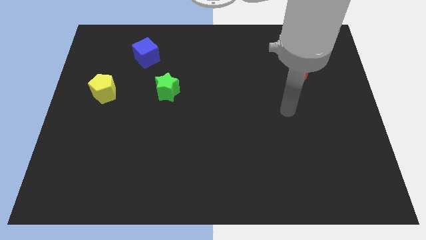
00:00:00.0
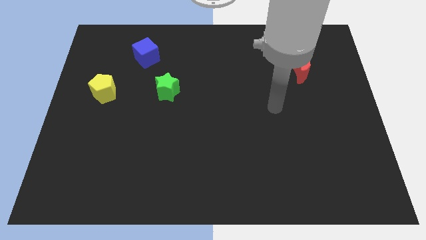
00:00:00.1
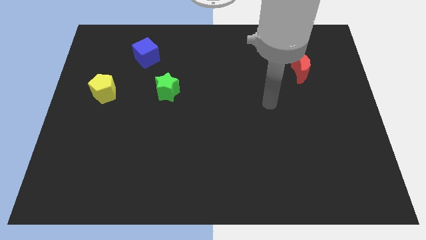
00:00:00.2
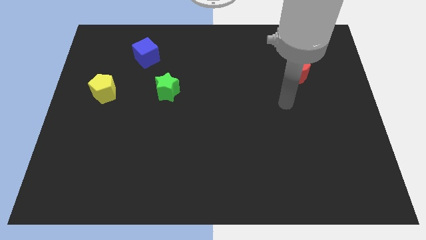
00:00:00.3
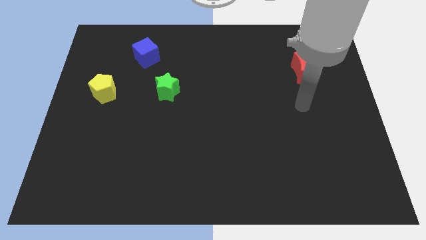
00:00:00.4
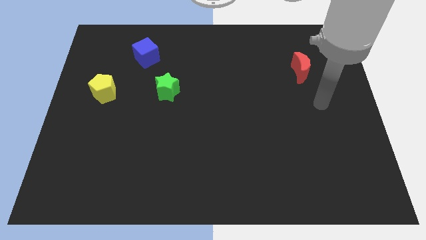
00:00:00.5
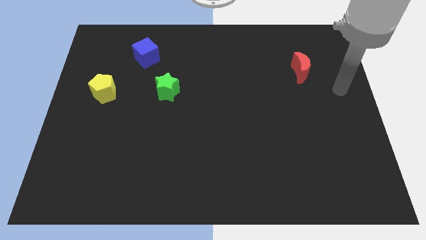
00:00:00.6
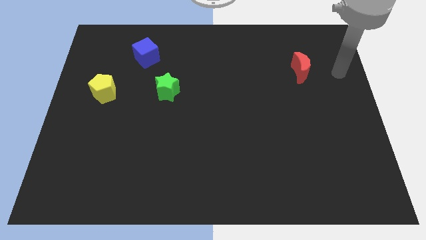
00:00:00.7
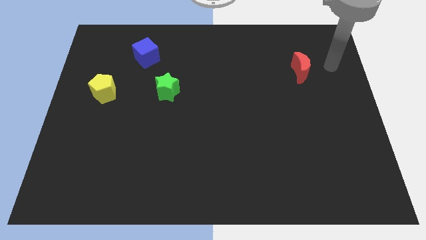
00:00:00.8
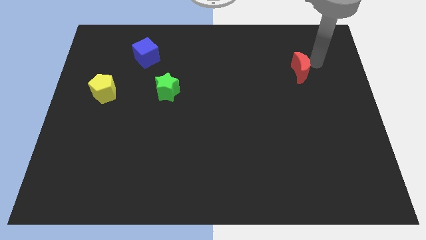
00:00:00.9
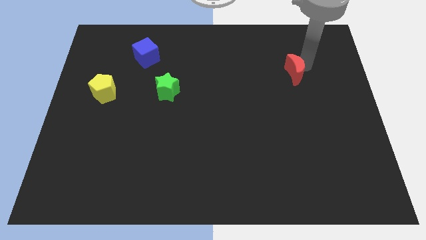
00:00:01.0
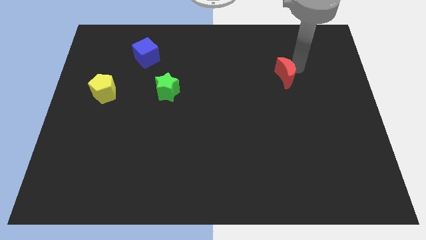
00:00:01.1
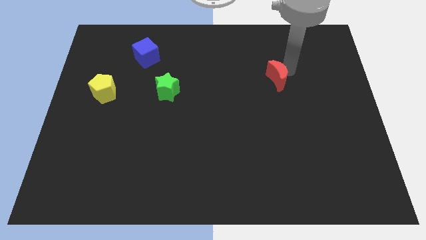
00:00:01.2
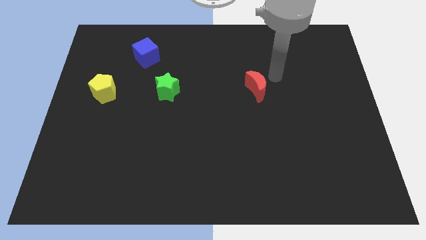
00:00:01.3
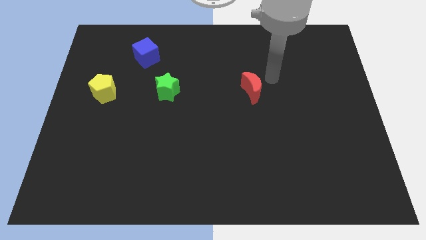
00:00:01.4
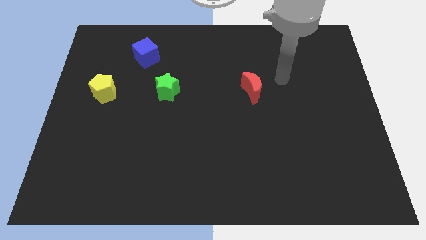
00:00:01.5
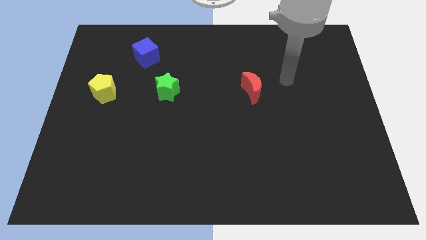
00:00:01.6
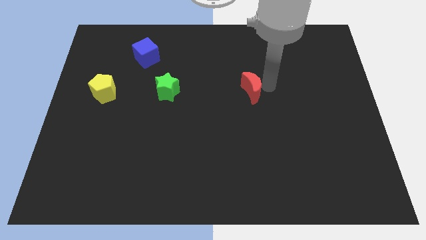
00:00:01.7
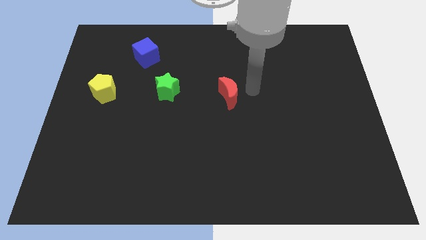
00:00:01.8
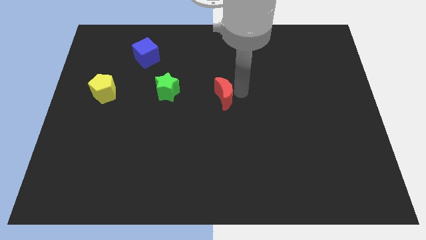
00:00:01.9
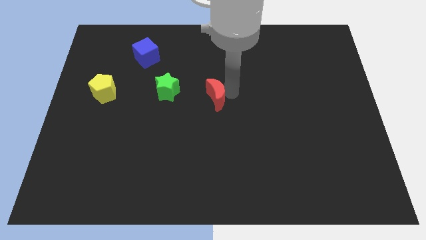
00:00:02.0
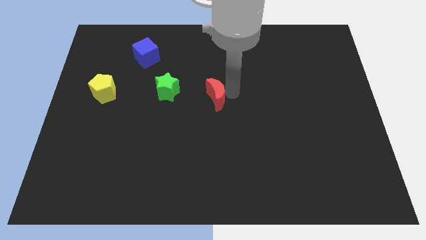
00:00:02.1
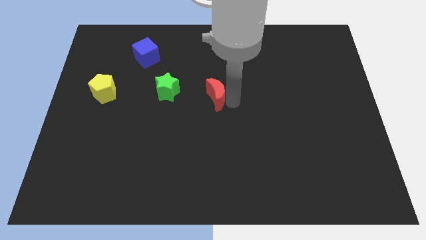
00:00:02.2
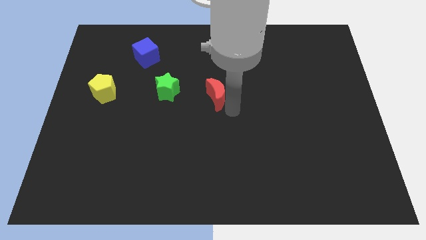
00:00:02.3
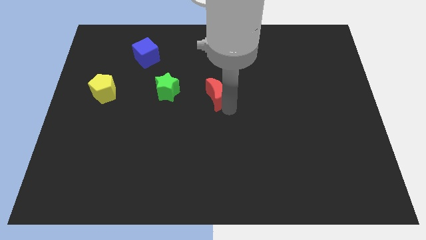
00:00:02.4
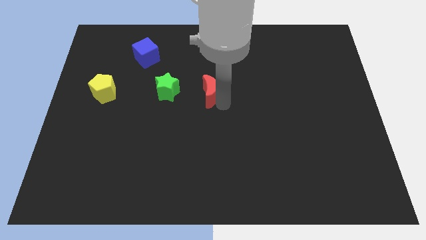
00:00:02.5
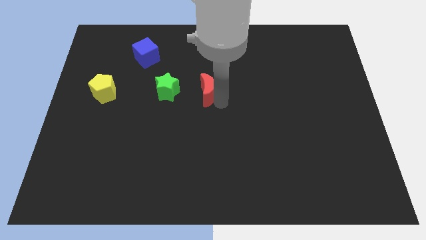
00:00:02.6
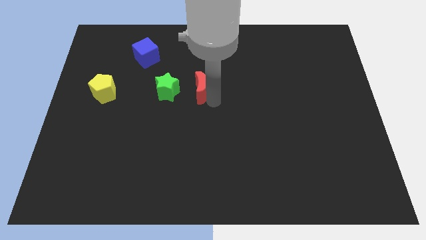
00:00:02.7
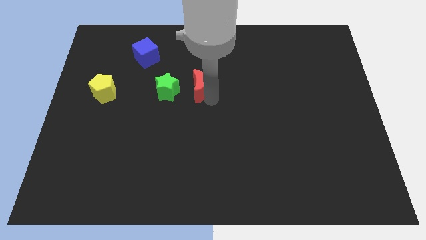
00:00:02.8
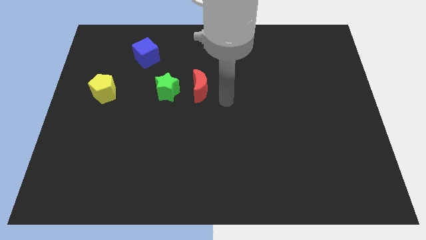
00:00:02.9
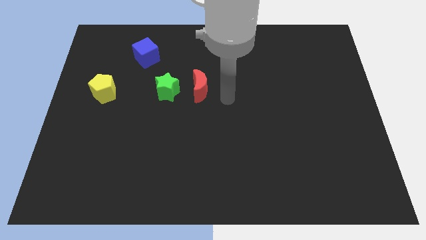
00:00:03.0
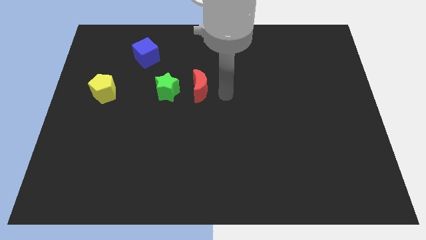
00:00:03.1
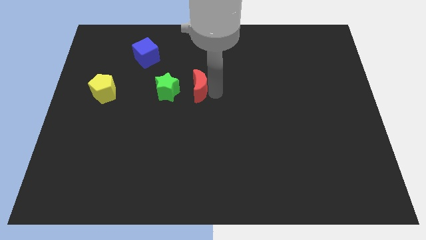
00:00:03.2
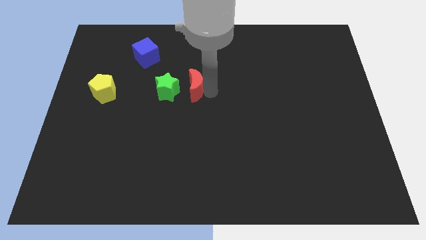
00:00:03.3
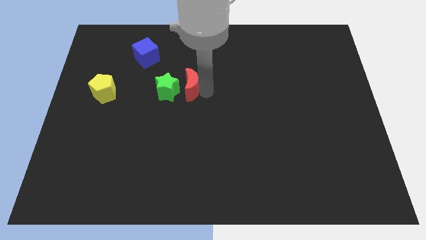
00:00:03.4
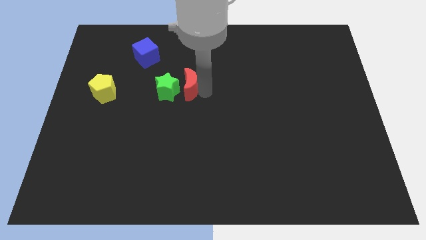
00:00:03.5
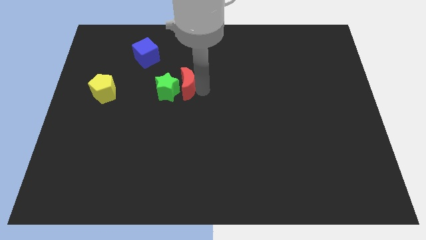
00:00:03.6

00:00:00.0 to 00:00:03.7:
move the red block close to the green star

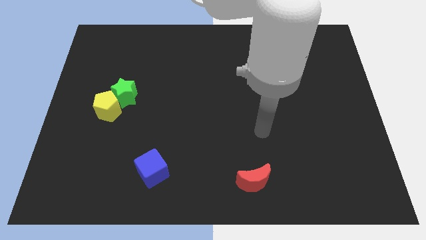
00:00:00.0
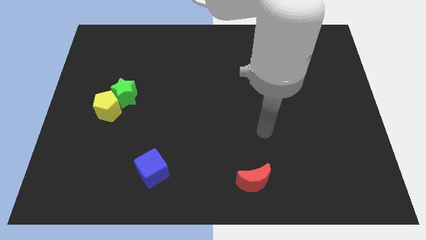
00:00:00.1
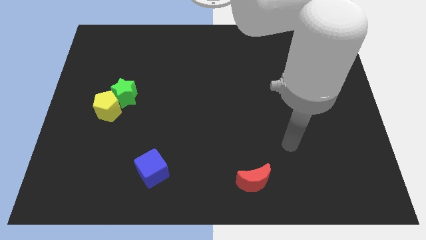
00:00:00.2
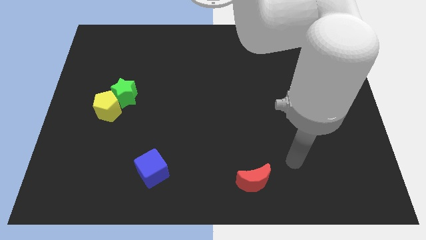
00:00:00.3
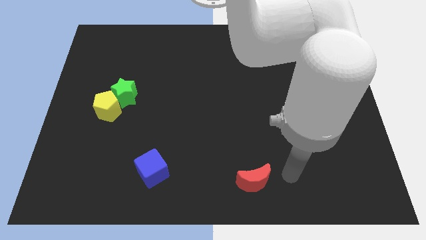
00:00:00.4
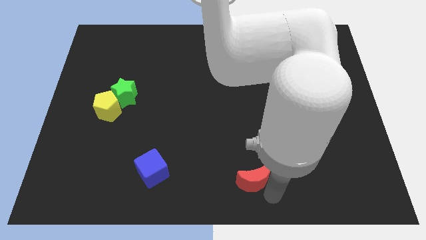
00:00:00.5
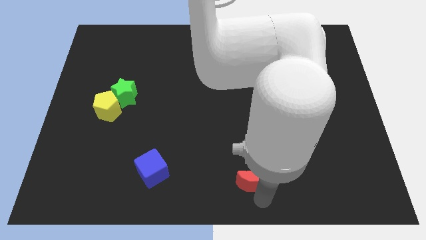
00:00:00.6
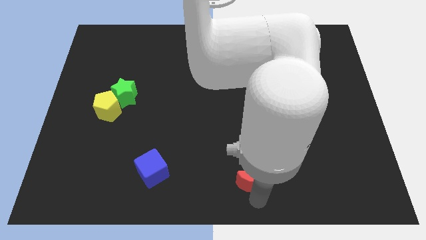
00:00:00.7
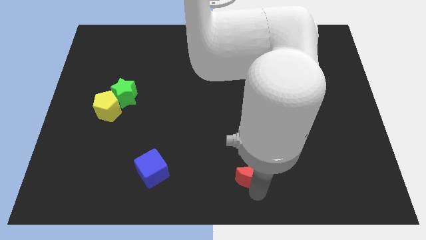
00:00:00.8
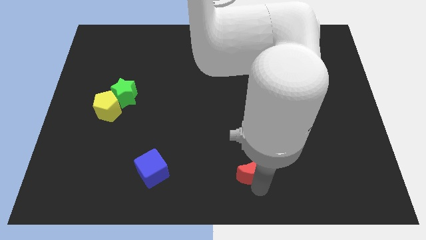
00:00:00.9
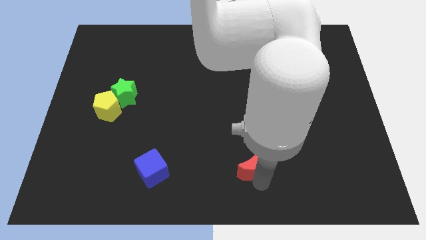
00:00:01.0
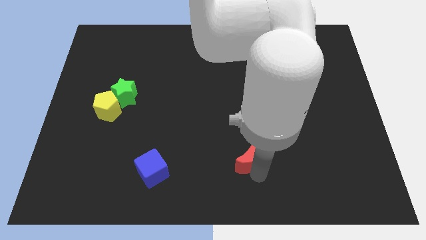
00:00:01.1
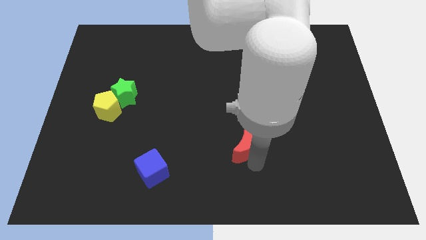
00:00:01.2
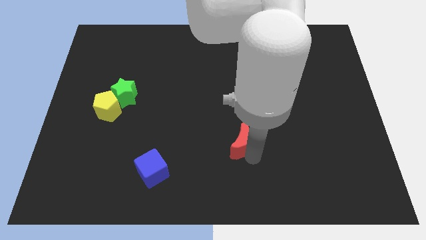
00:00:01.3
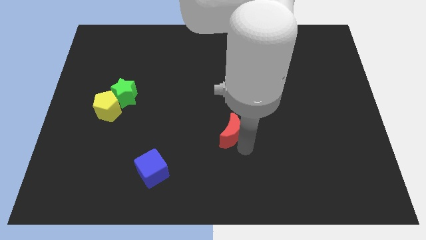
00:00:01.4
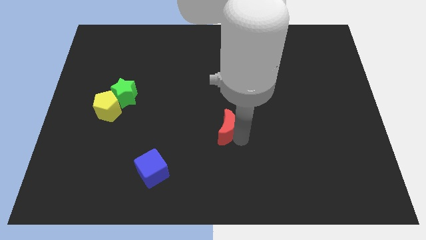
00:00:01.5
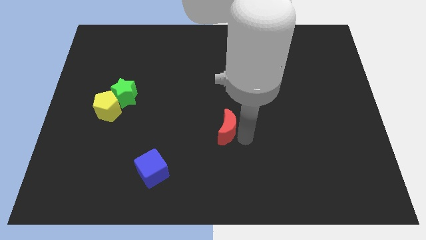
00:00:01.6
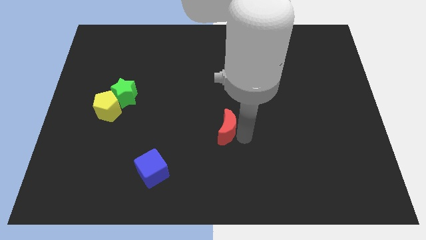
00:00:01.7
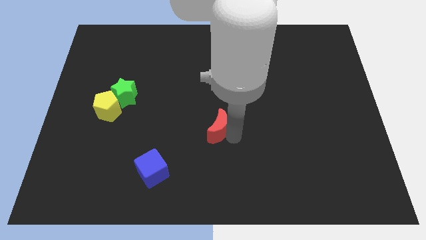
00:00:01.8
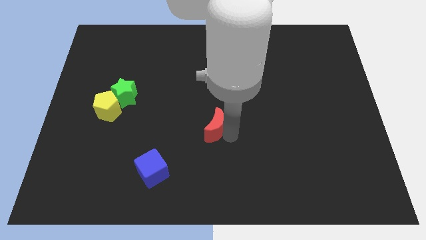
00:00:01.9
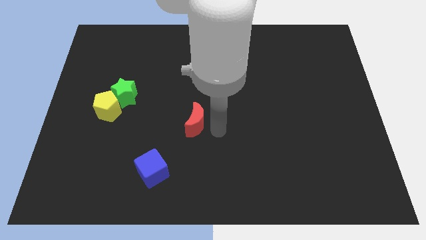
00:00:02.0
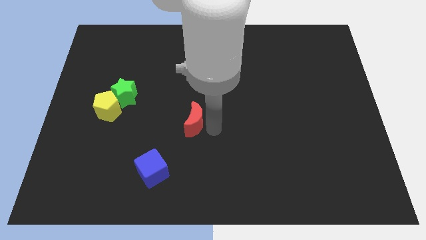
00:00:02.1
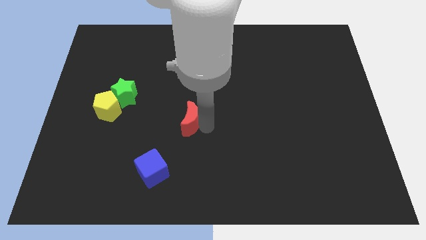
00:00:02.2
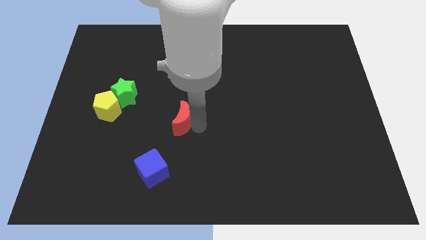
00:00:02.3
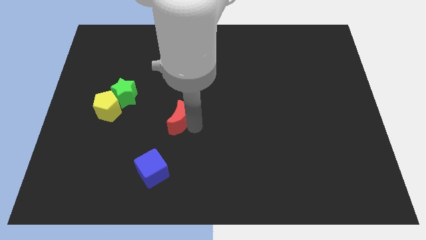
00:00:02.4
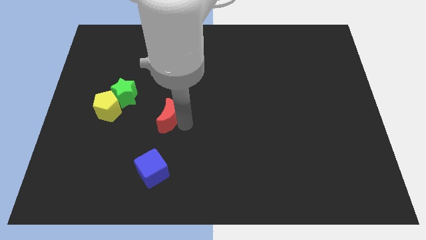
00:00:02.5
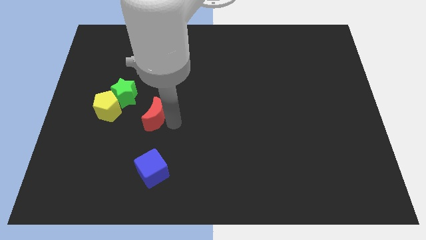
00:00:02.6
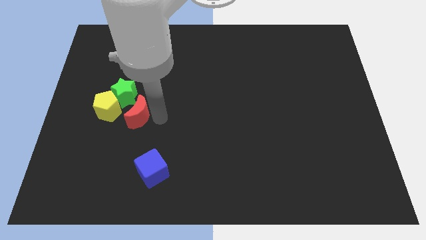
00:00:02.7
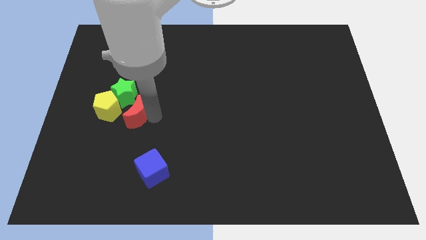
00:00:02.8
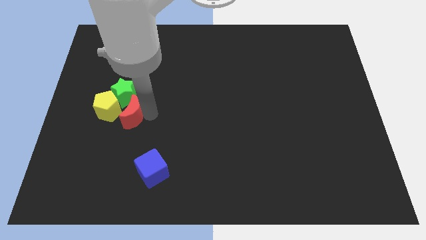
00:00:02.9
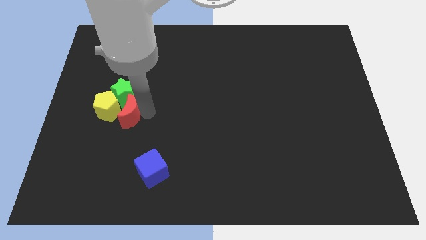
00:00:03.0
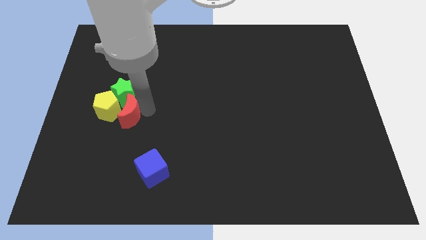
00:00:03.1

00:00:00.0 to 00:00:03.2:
slide the moon next to the star

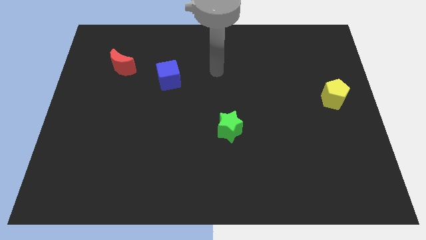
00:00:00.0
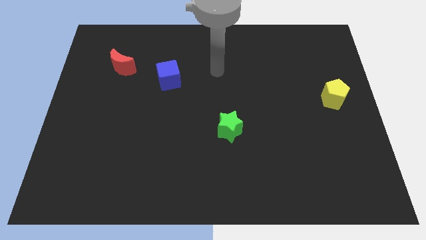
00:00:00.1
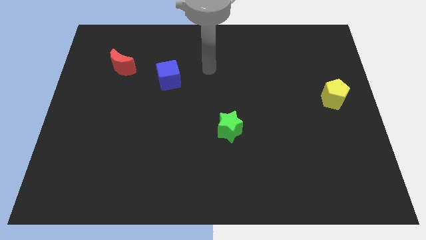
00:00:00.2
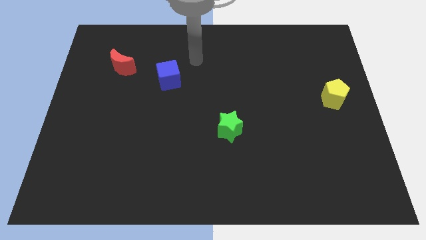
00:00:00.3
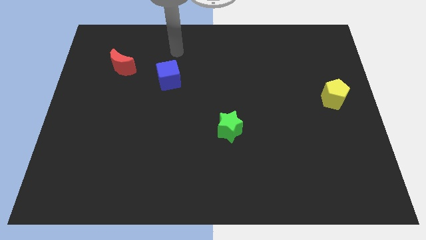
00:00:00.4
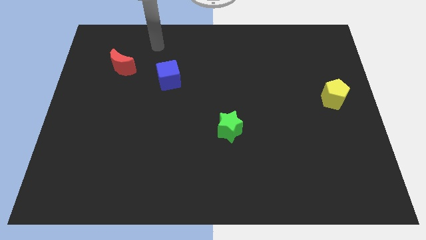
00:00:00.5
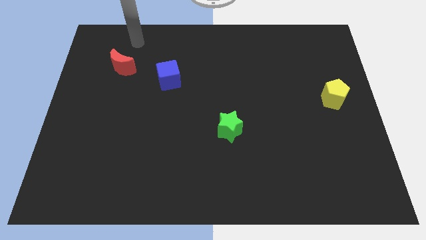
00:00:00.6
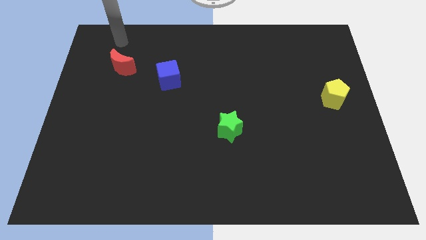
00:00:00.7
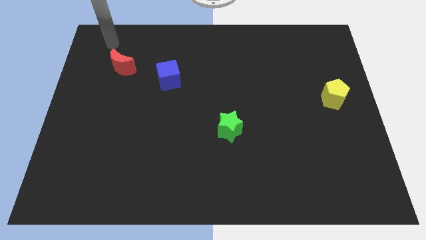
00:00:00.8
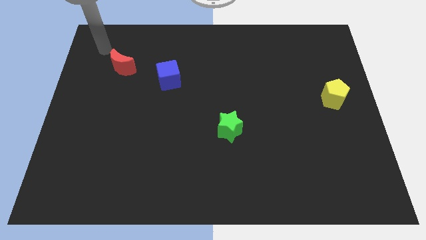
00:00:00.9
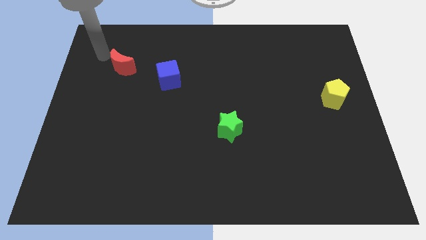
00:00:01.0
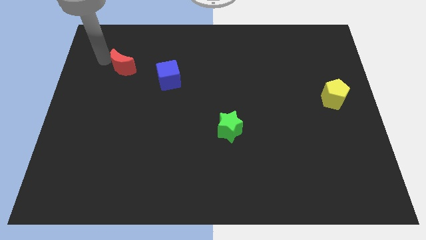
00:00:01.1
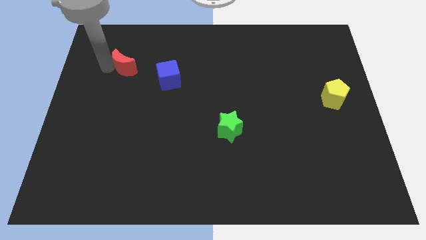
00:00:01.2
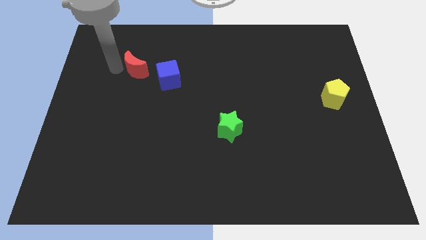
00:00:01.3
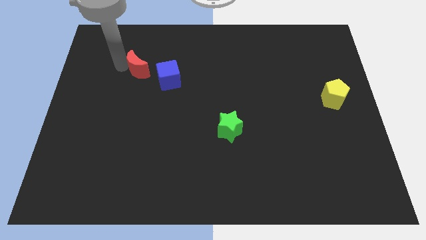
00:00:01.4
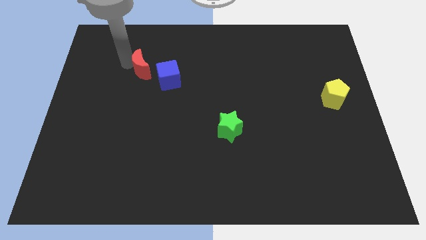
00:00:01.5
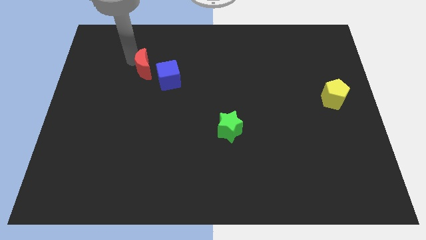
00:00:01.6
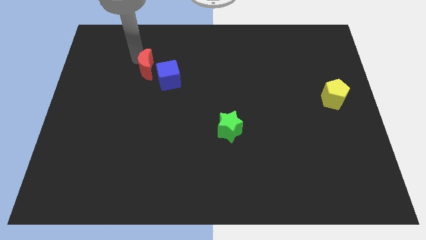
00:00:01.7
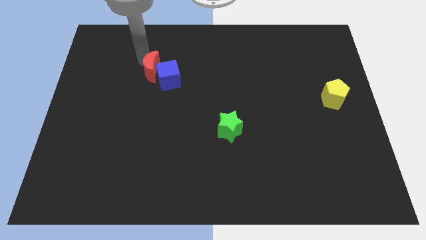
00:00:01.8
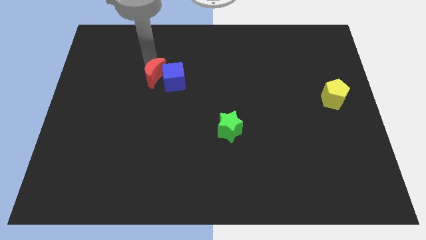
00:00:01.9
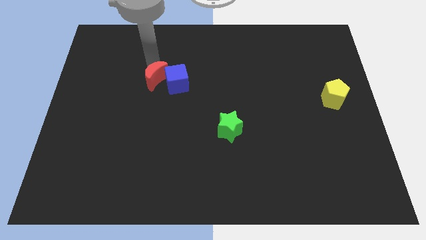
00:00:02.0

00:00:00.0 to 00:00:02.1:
put the red moon next to the cube
